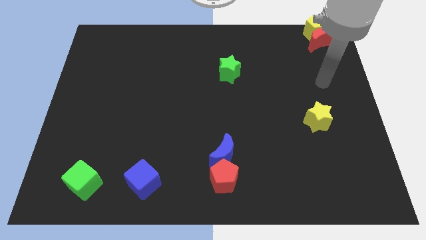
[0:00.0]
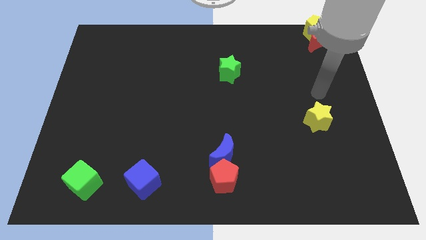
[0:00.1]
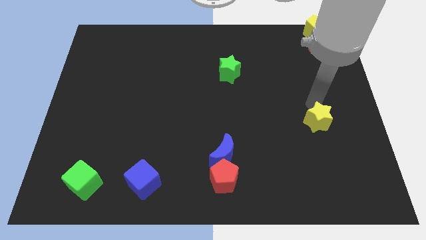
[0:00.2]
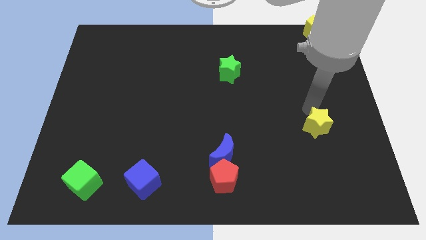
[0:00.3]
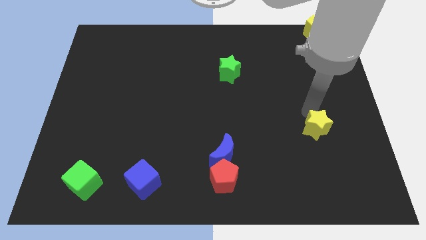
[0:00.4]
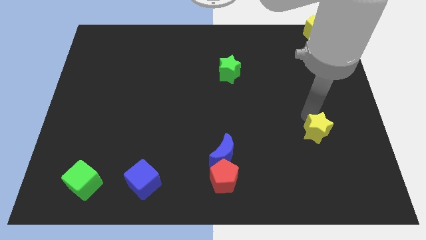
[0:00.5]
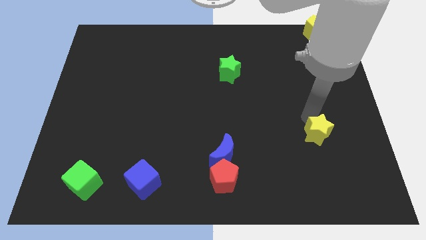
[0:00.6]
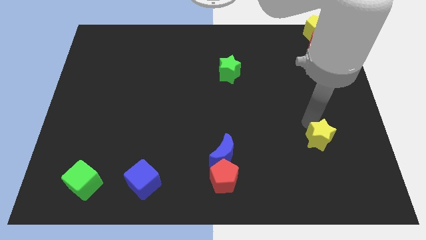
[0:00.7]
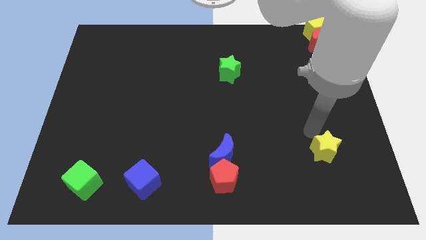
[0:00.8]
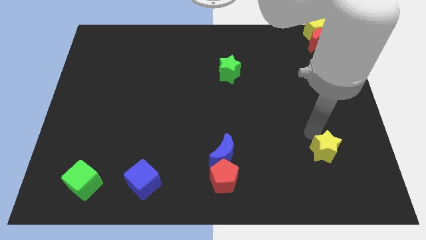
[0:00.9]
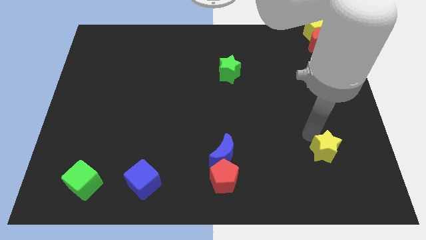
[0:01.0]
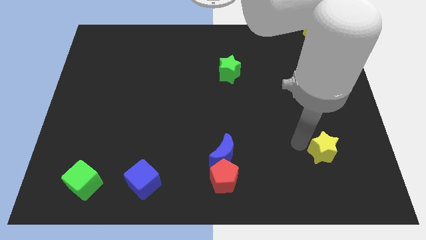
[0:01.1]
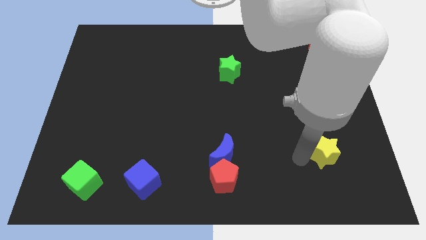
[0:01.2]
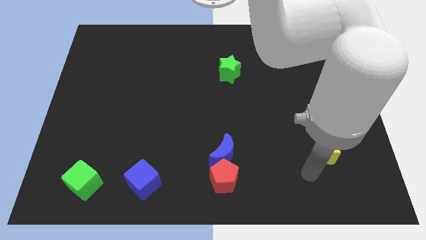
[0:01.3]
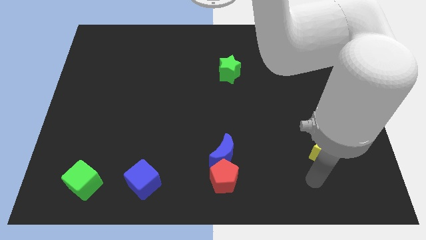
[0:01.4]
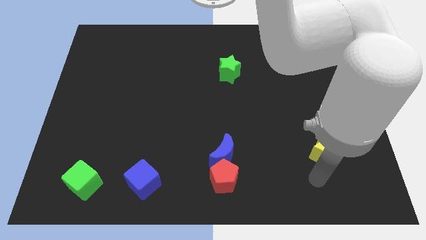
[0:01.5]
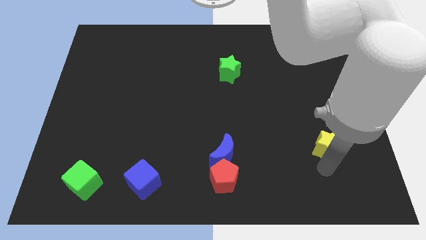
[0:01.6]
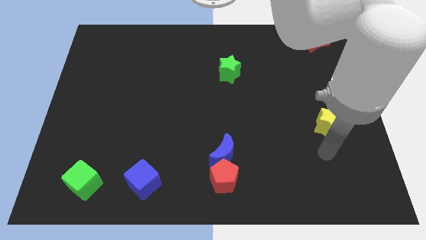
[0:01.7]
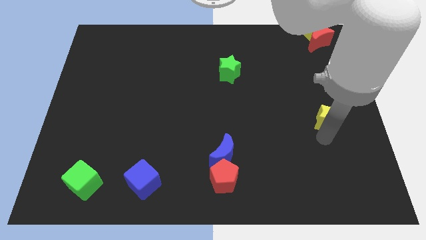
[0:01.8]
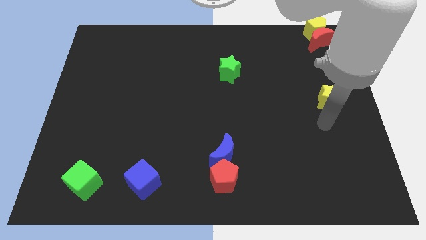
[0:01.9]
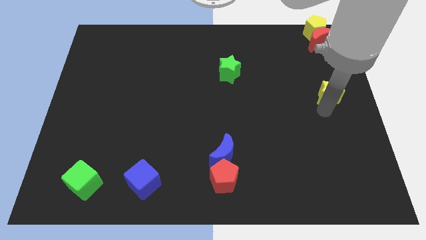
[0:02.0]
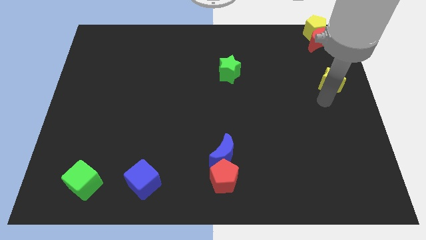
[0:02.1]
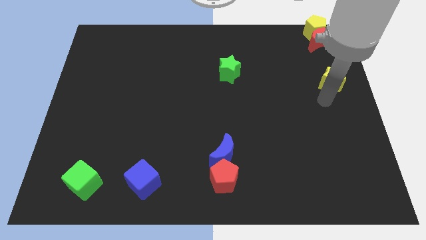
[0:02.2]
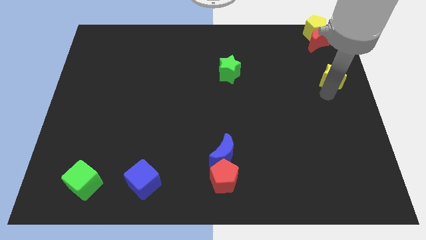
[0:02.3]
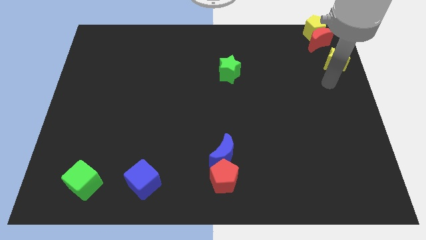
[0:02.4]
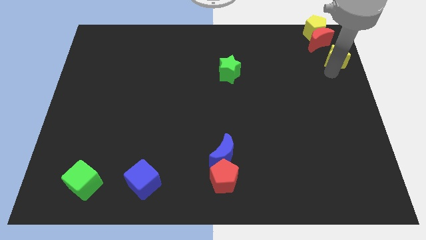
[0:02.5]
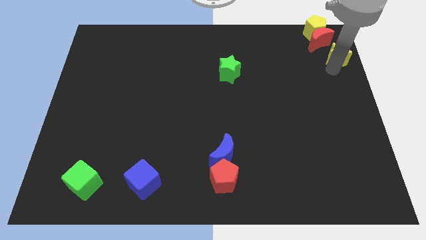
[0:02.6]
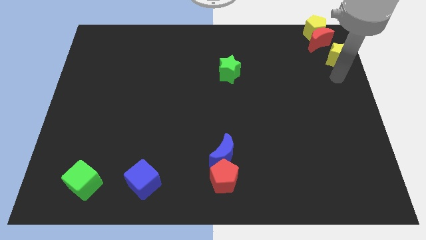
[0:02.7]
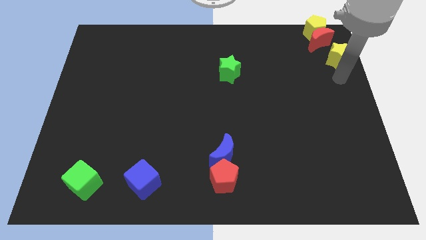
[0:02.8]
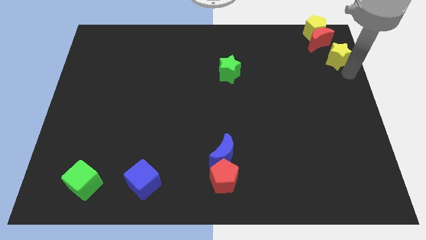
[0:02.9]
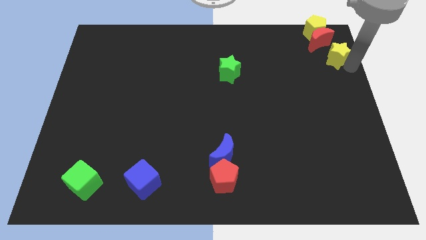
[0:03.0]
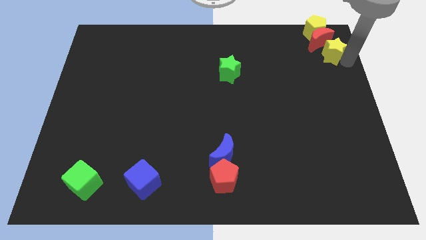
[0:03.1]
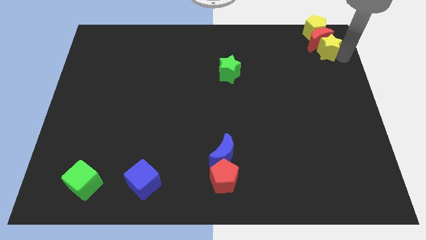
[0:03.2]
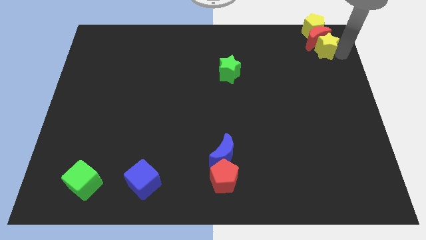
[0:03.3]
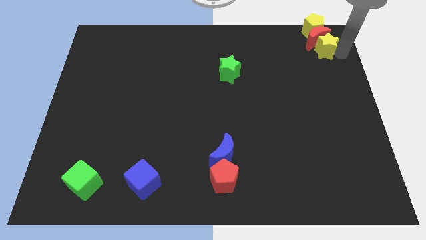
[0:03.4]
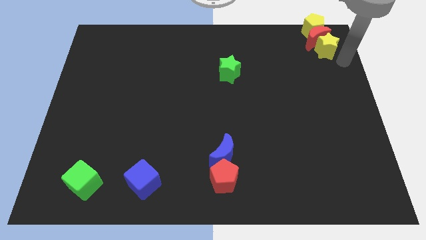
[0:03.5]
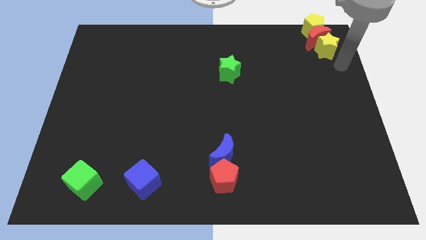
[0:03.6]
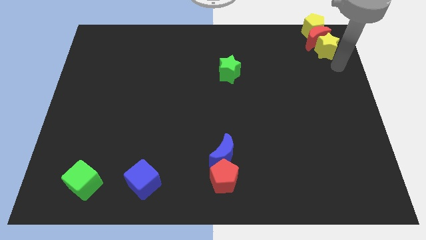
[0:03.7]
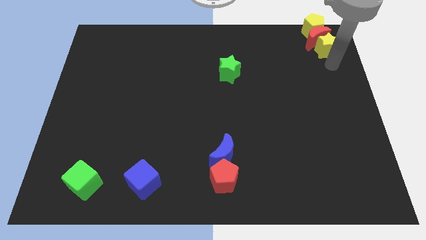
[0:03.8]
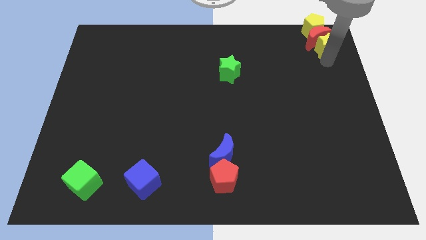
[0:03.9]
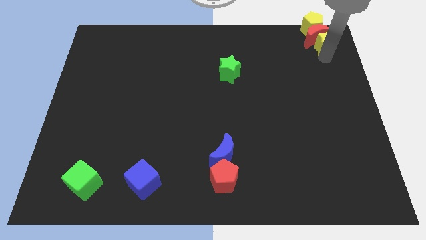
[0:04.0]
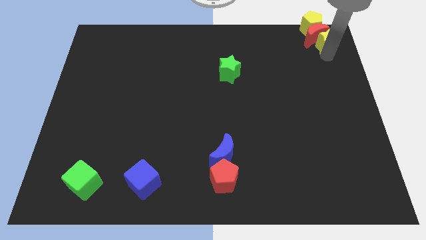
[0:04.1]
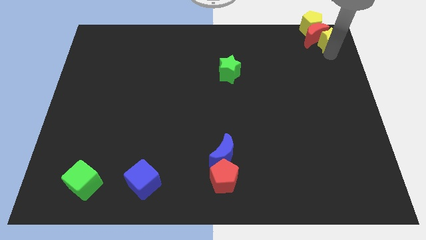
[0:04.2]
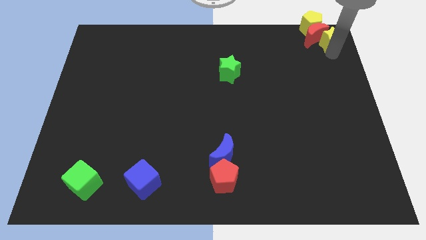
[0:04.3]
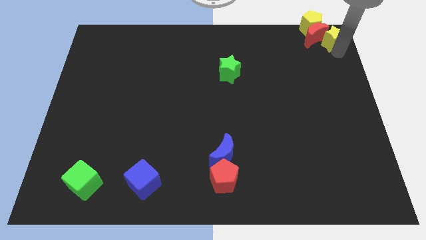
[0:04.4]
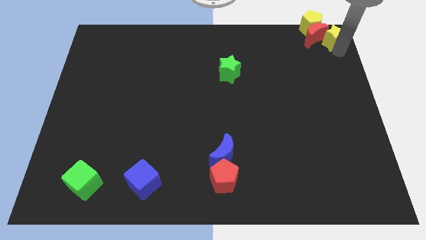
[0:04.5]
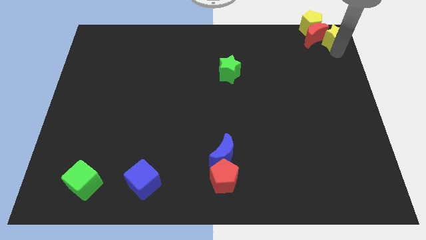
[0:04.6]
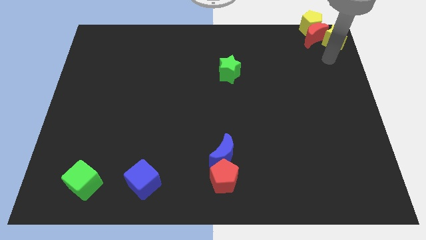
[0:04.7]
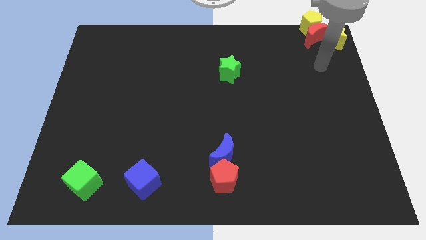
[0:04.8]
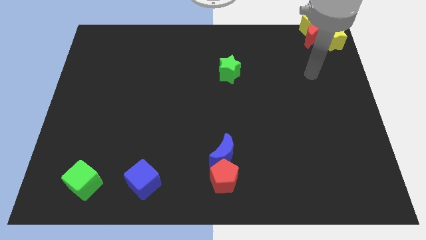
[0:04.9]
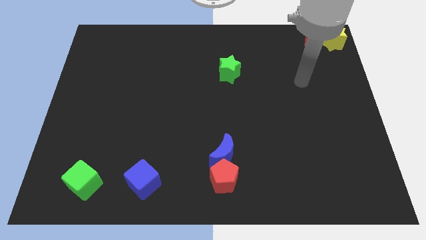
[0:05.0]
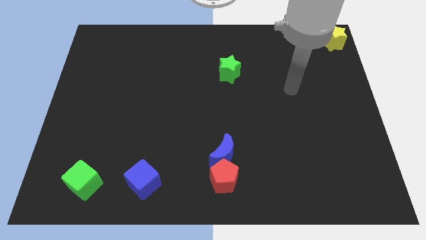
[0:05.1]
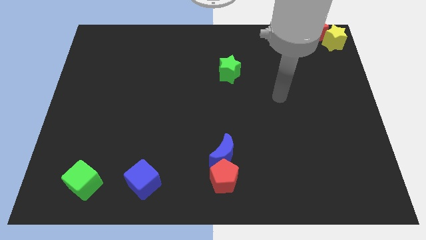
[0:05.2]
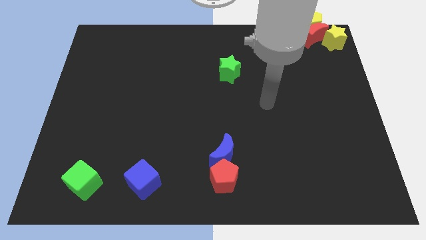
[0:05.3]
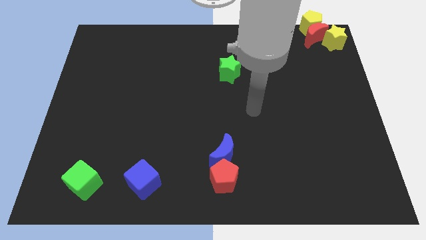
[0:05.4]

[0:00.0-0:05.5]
place the yellow star to the top right corner of the board

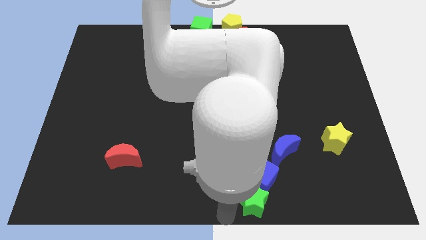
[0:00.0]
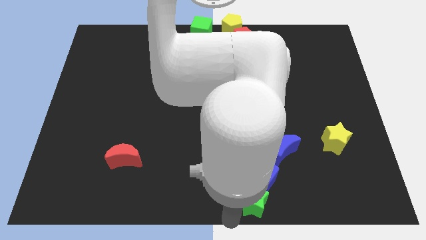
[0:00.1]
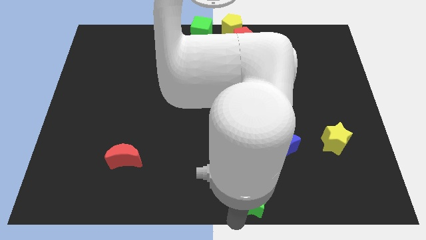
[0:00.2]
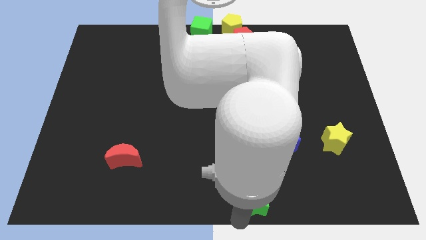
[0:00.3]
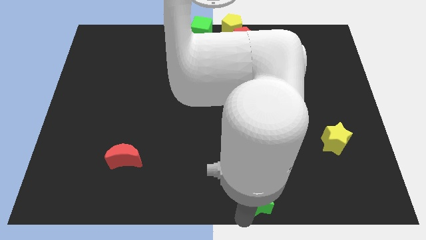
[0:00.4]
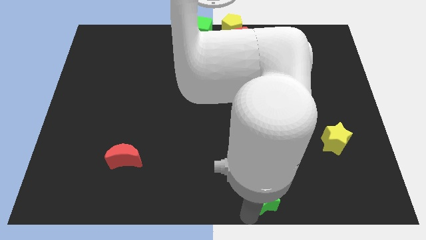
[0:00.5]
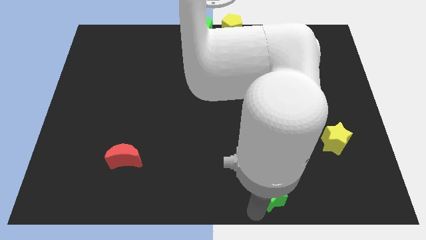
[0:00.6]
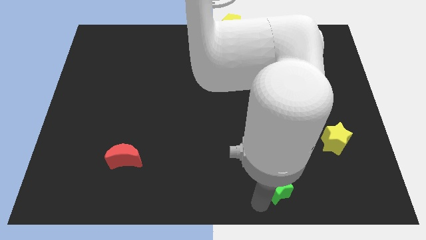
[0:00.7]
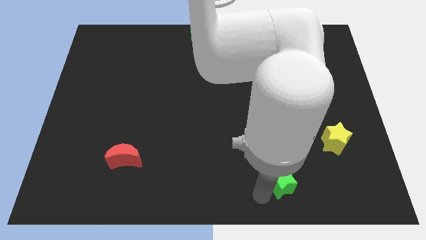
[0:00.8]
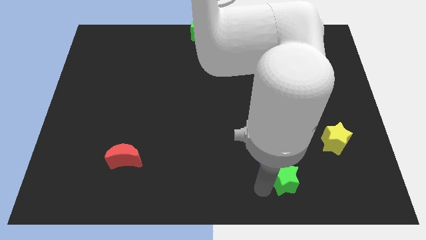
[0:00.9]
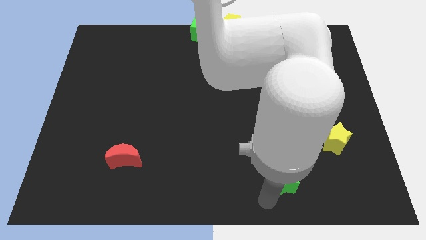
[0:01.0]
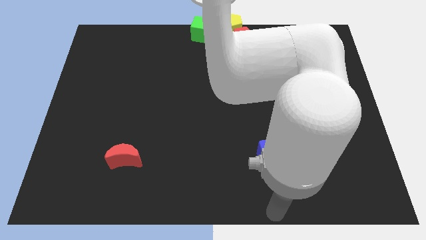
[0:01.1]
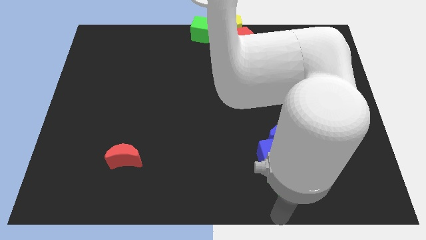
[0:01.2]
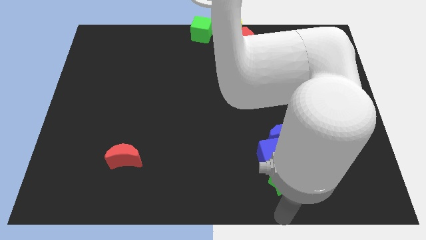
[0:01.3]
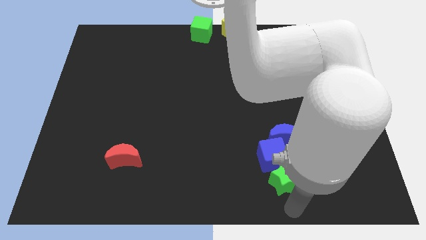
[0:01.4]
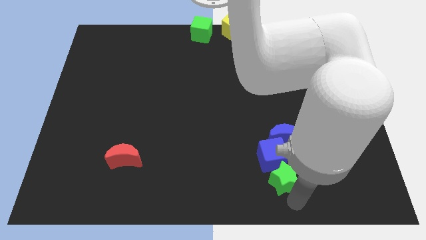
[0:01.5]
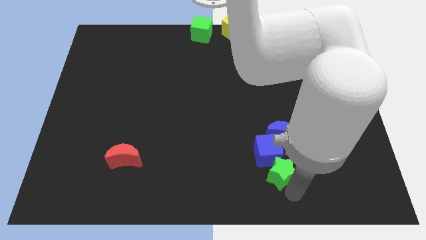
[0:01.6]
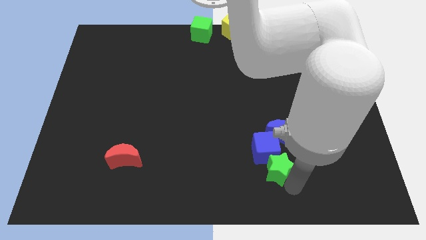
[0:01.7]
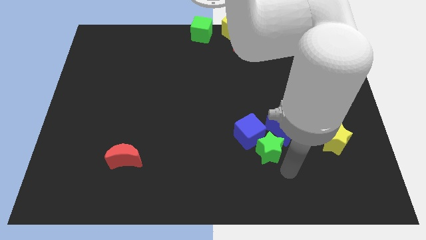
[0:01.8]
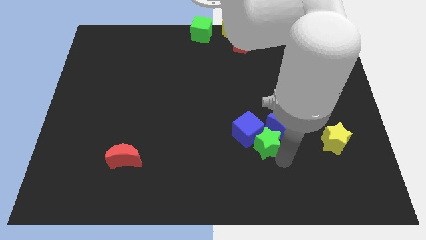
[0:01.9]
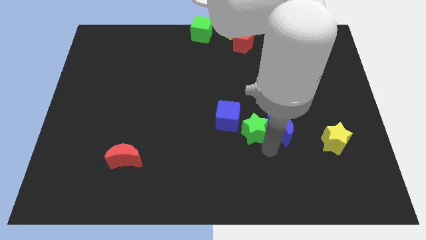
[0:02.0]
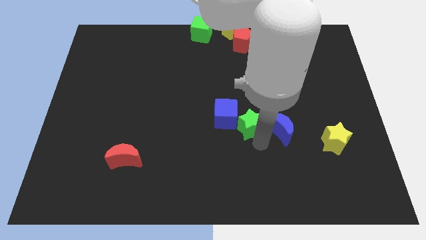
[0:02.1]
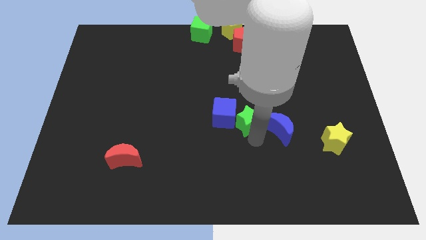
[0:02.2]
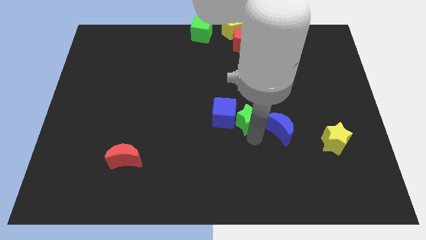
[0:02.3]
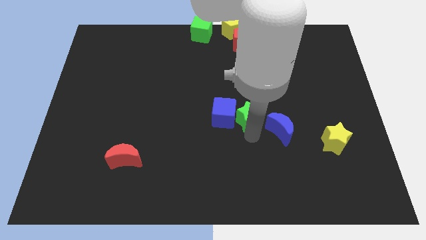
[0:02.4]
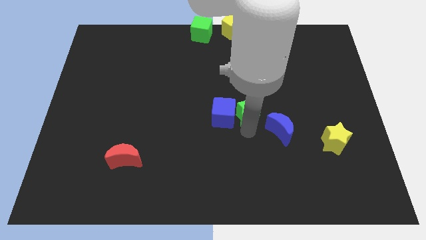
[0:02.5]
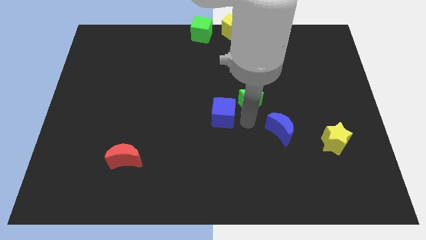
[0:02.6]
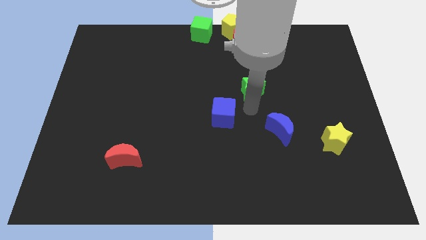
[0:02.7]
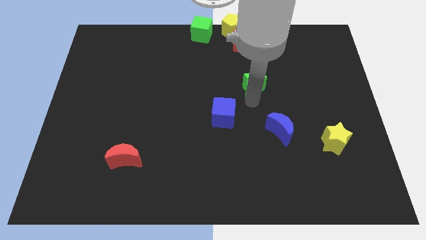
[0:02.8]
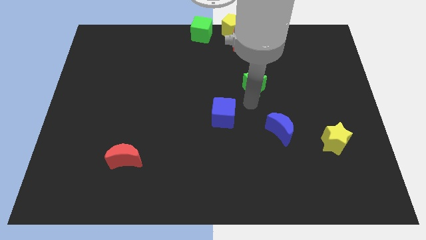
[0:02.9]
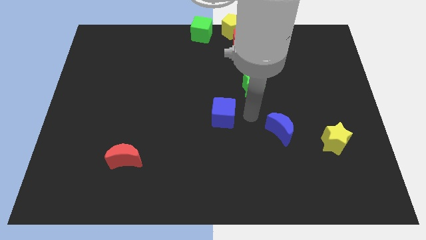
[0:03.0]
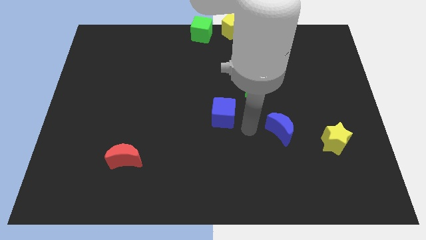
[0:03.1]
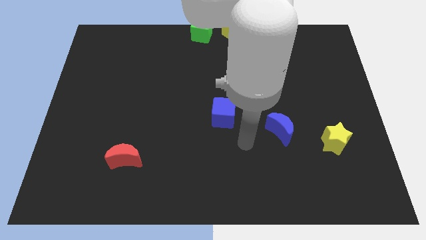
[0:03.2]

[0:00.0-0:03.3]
slide the blue cube and green star to the top side of the board

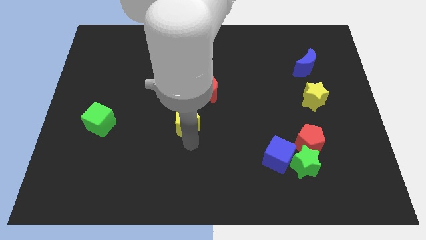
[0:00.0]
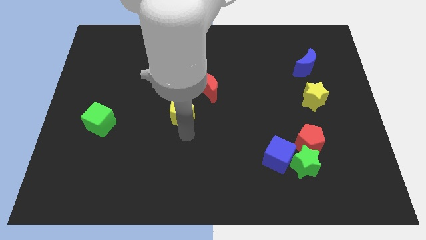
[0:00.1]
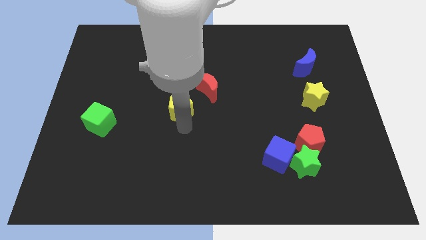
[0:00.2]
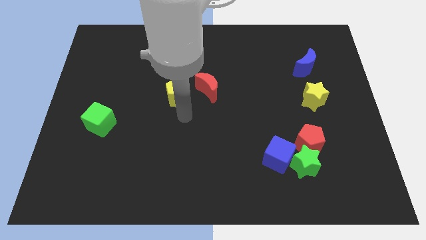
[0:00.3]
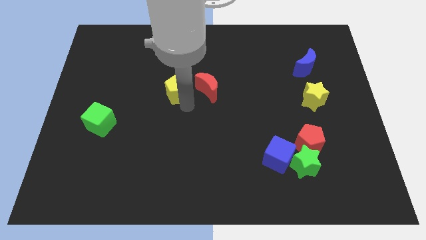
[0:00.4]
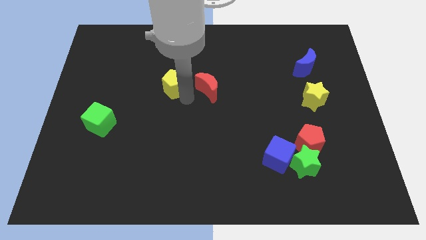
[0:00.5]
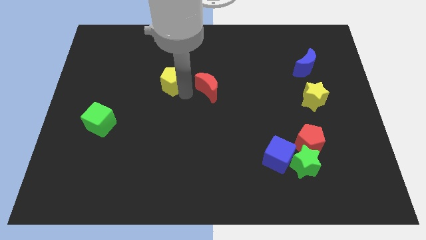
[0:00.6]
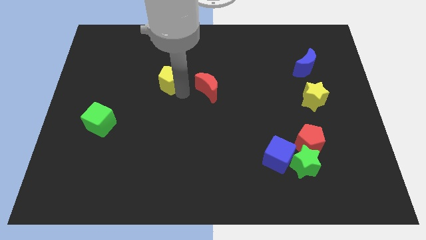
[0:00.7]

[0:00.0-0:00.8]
place yellow pentagon left to red moon
